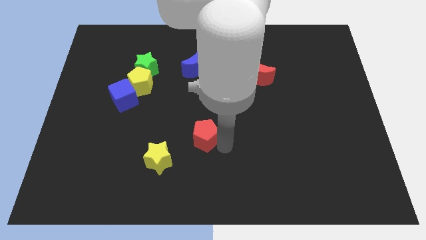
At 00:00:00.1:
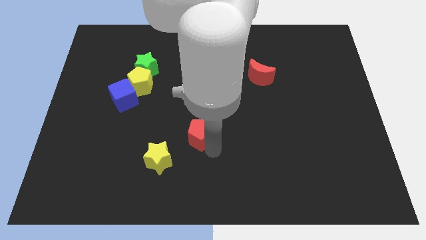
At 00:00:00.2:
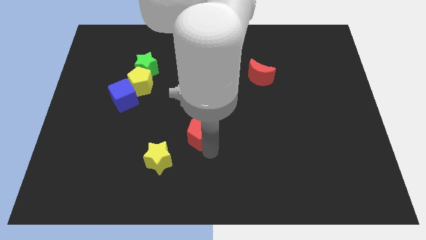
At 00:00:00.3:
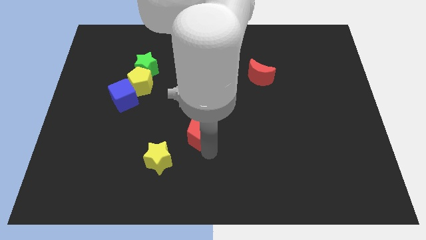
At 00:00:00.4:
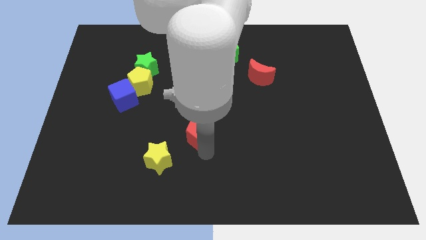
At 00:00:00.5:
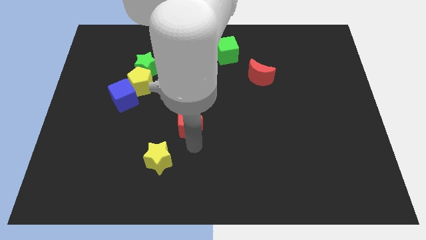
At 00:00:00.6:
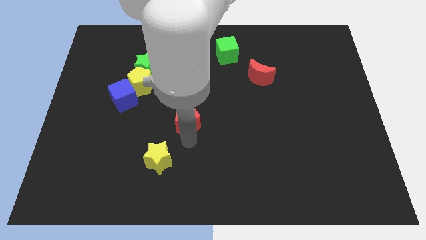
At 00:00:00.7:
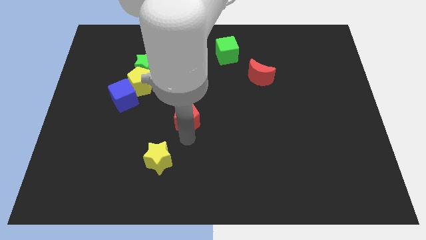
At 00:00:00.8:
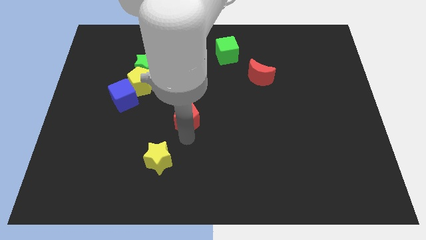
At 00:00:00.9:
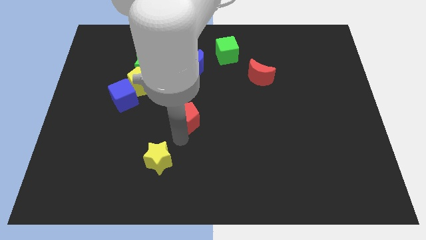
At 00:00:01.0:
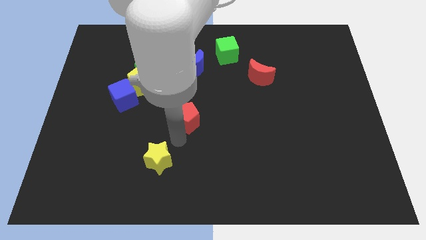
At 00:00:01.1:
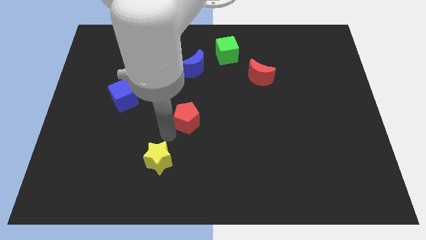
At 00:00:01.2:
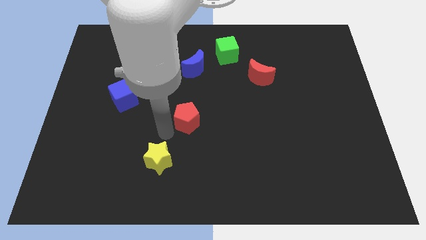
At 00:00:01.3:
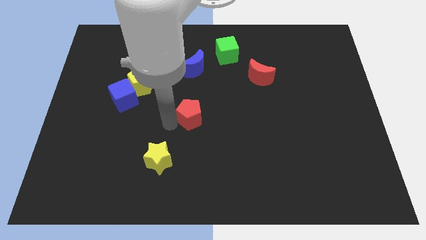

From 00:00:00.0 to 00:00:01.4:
slide the red pentagon vertically below the blue moon

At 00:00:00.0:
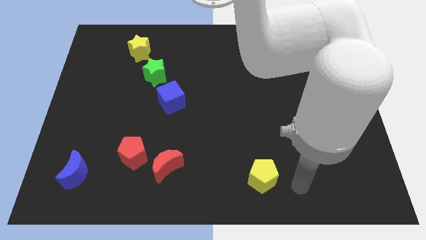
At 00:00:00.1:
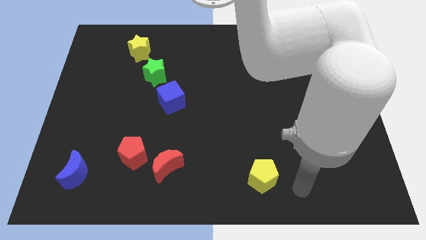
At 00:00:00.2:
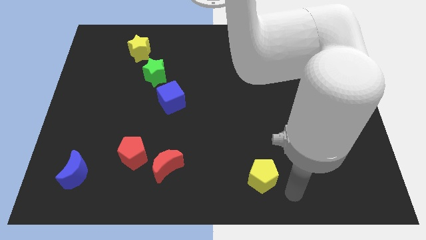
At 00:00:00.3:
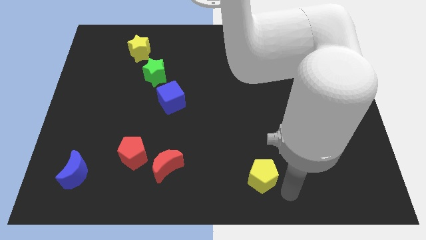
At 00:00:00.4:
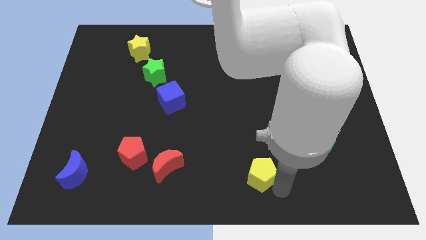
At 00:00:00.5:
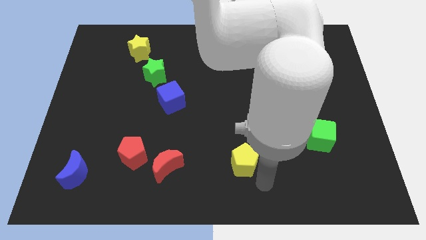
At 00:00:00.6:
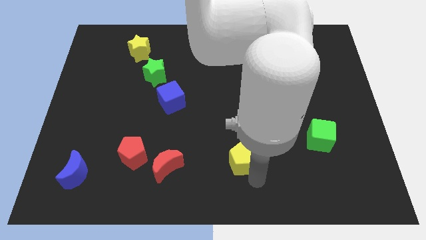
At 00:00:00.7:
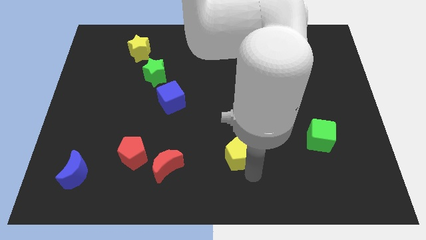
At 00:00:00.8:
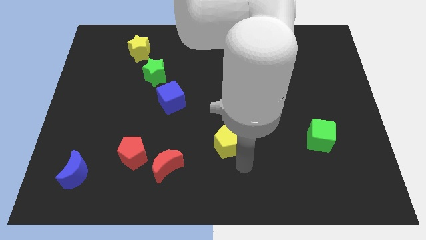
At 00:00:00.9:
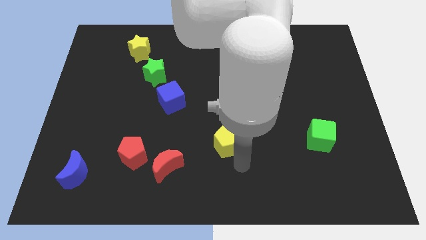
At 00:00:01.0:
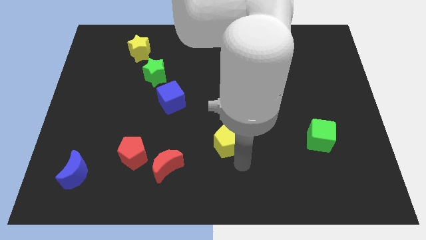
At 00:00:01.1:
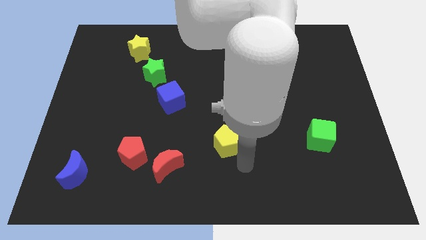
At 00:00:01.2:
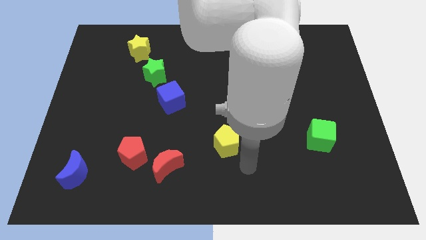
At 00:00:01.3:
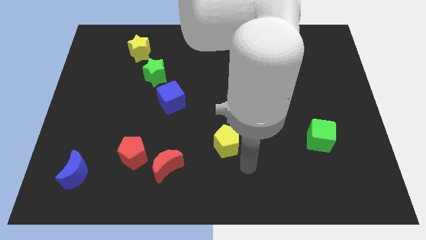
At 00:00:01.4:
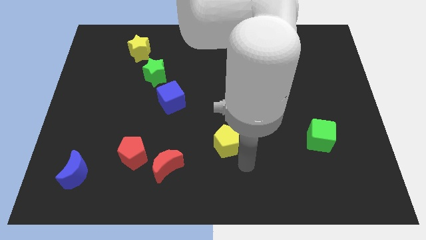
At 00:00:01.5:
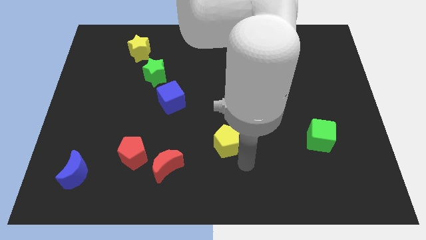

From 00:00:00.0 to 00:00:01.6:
move yellow pentagon slightly upwards

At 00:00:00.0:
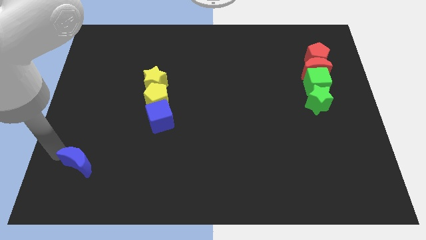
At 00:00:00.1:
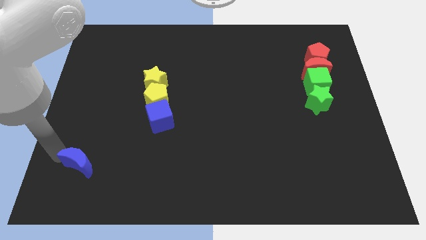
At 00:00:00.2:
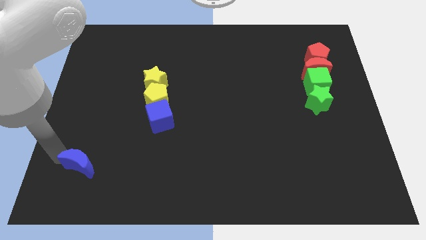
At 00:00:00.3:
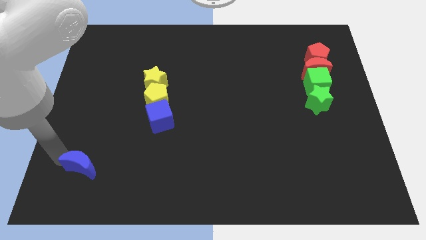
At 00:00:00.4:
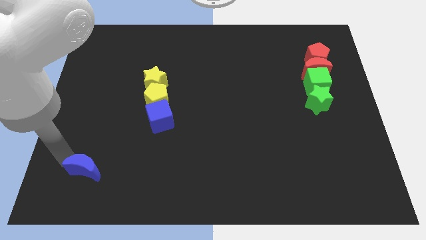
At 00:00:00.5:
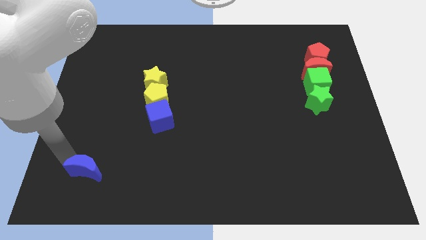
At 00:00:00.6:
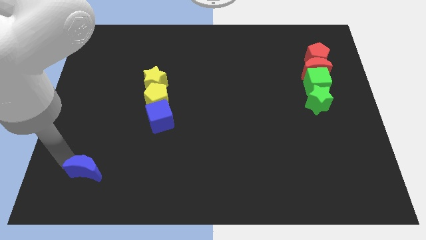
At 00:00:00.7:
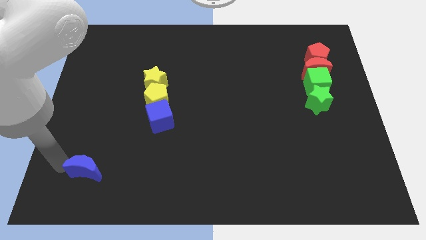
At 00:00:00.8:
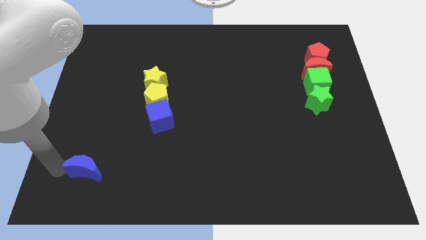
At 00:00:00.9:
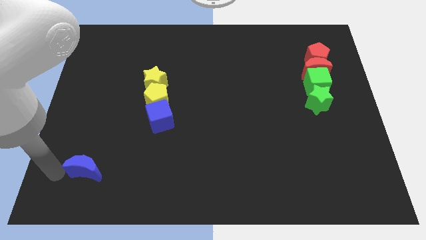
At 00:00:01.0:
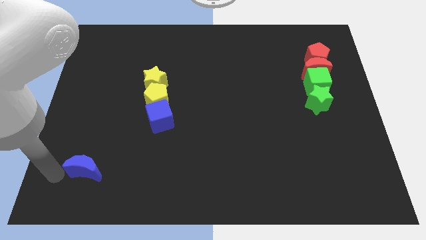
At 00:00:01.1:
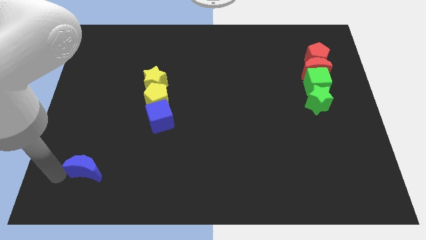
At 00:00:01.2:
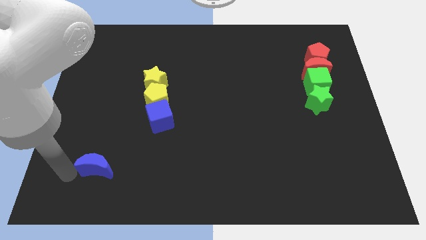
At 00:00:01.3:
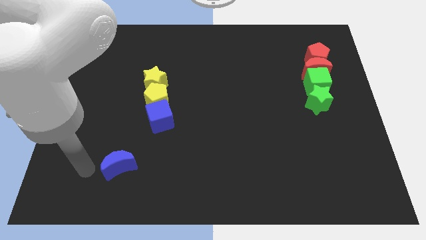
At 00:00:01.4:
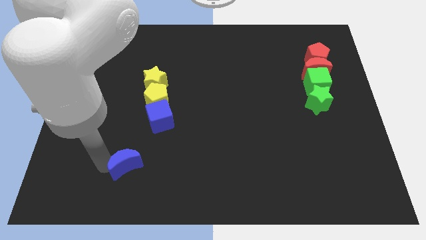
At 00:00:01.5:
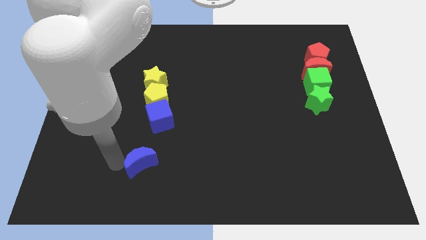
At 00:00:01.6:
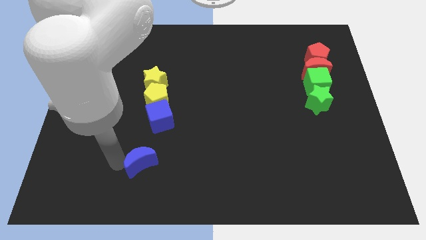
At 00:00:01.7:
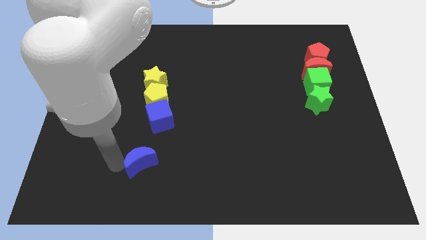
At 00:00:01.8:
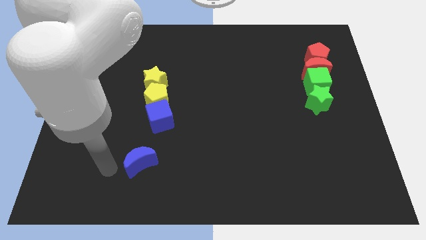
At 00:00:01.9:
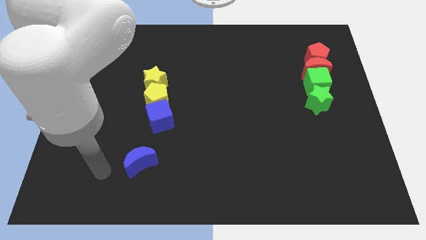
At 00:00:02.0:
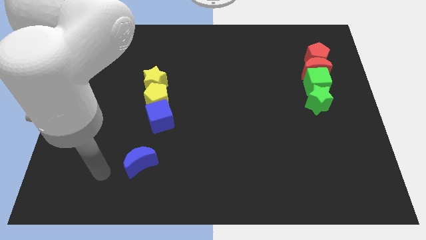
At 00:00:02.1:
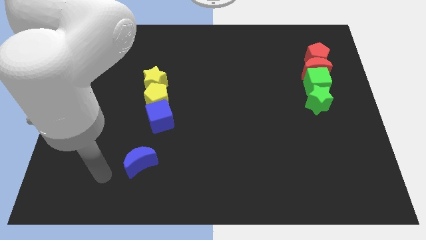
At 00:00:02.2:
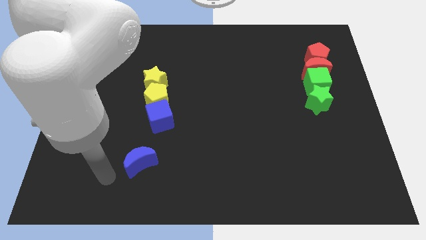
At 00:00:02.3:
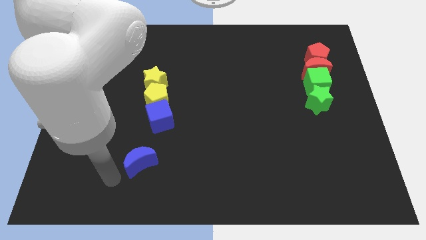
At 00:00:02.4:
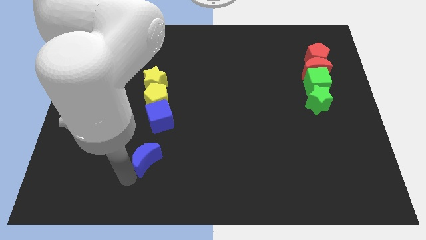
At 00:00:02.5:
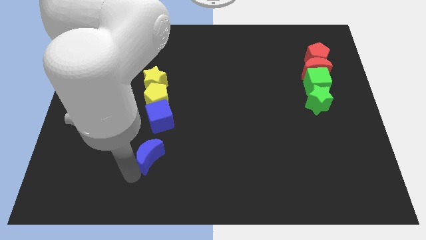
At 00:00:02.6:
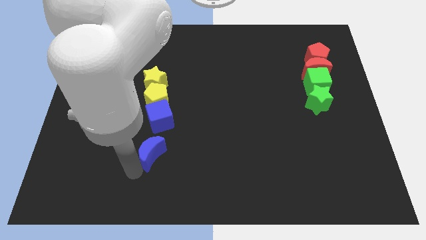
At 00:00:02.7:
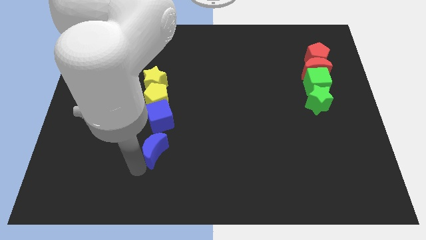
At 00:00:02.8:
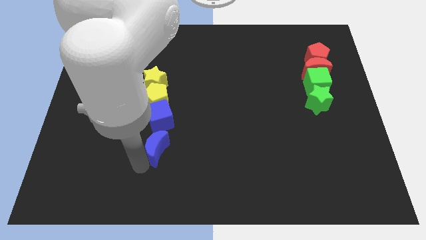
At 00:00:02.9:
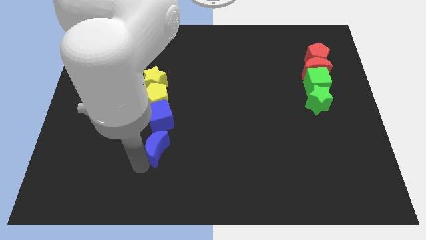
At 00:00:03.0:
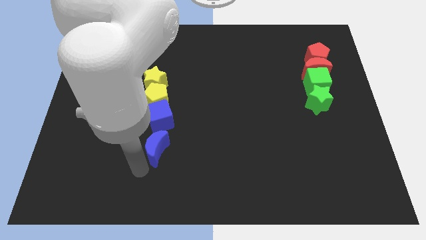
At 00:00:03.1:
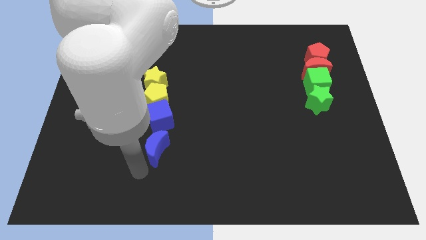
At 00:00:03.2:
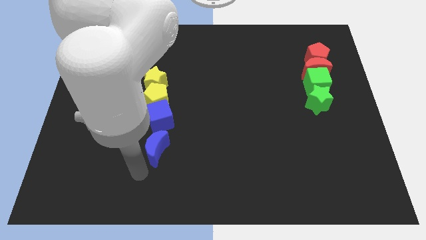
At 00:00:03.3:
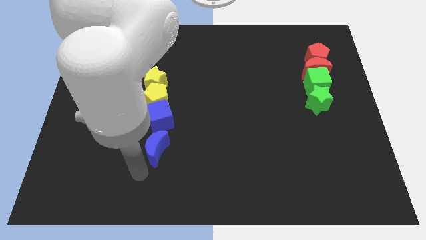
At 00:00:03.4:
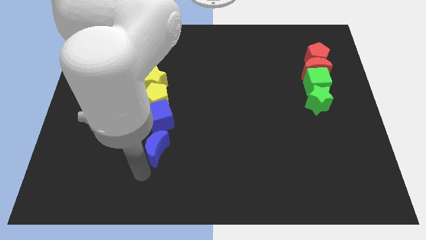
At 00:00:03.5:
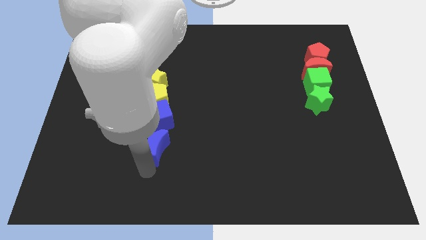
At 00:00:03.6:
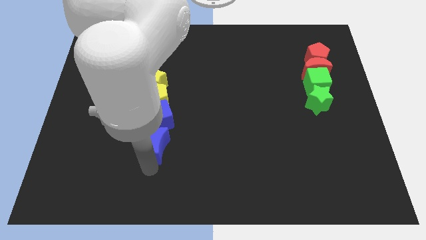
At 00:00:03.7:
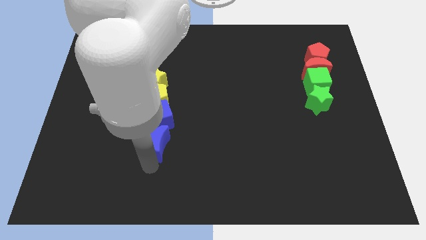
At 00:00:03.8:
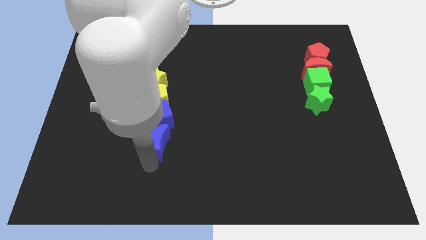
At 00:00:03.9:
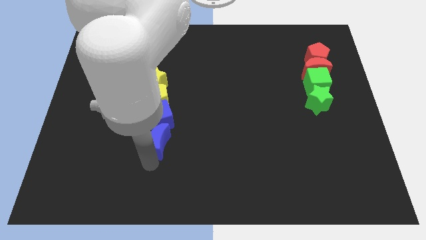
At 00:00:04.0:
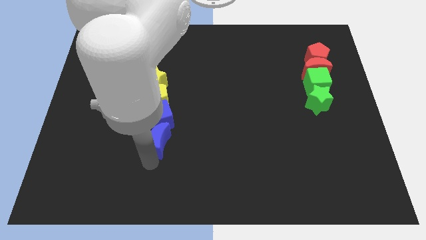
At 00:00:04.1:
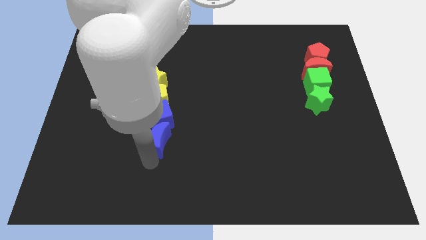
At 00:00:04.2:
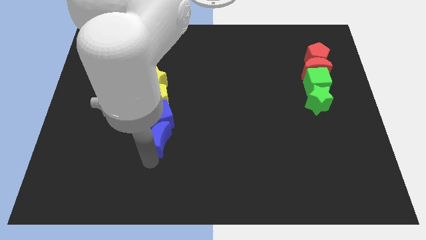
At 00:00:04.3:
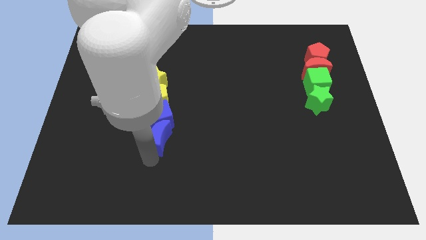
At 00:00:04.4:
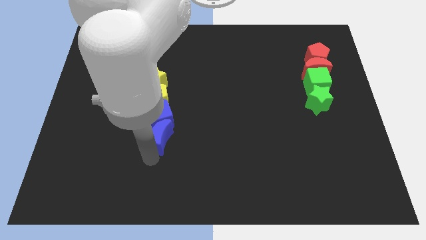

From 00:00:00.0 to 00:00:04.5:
place blue crescent below blue cube

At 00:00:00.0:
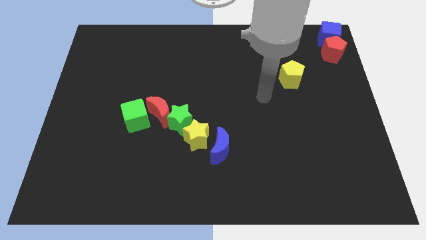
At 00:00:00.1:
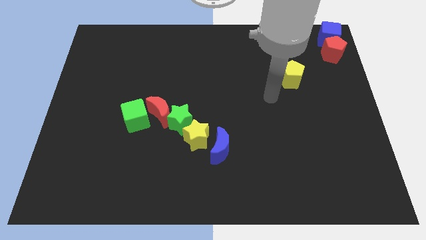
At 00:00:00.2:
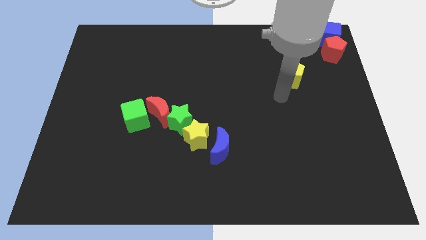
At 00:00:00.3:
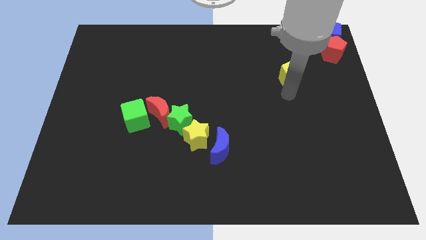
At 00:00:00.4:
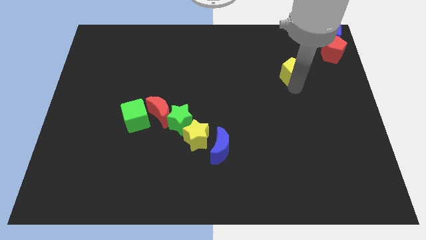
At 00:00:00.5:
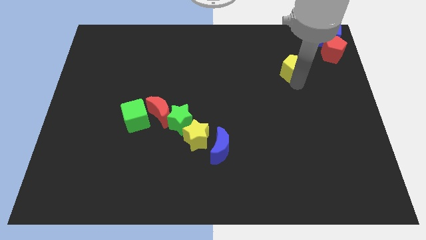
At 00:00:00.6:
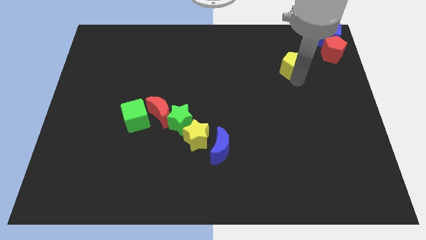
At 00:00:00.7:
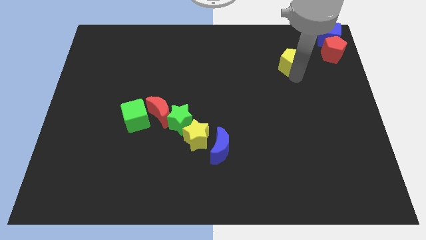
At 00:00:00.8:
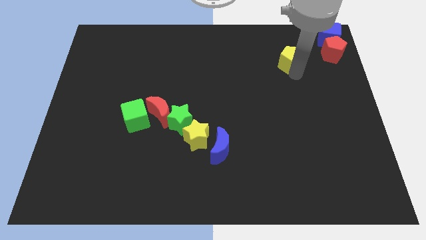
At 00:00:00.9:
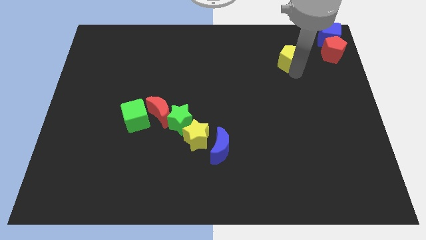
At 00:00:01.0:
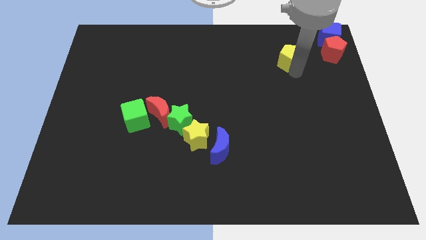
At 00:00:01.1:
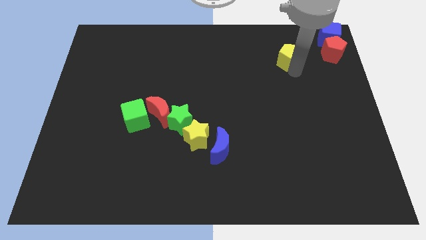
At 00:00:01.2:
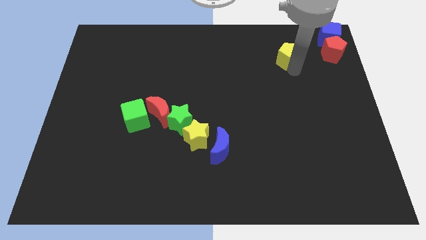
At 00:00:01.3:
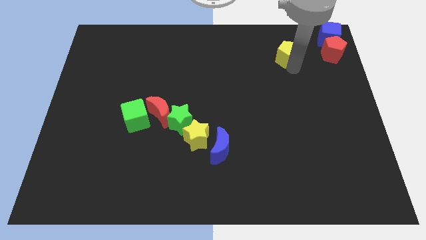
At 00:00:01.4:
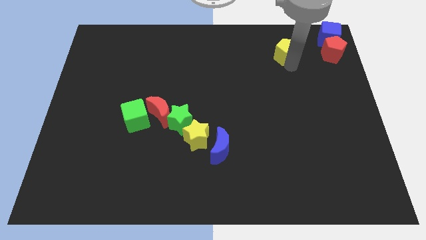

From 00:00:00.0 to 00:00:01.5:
place the yellow pentagon to the left of the red pentagon
